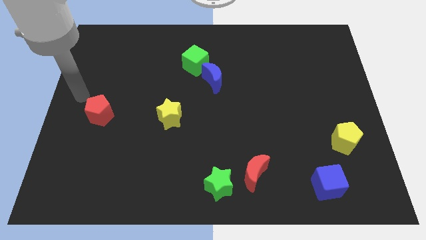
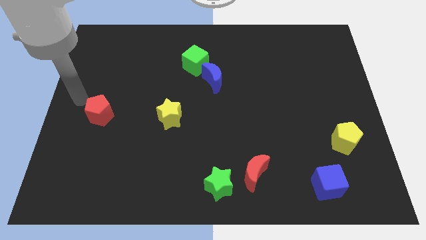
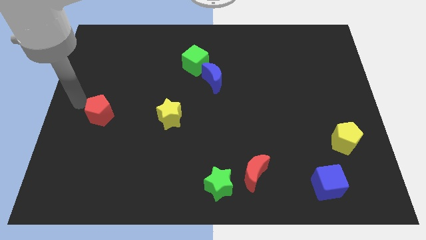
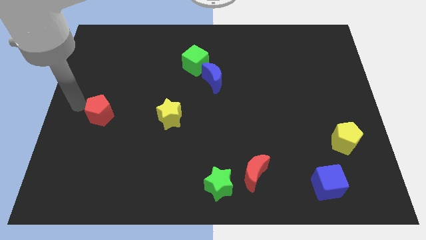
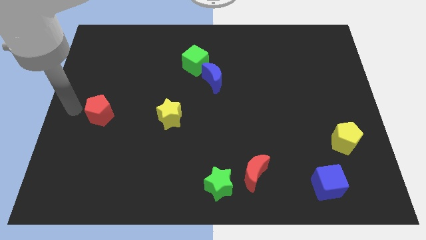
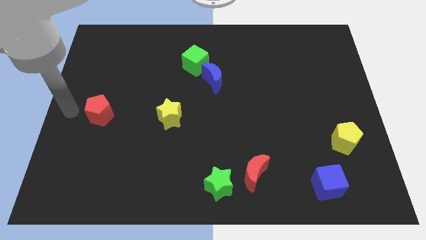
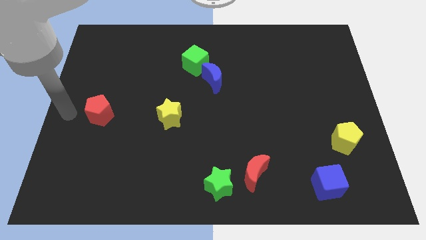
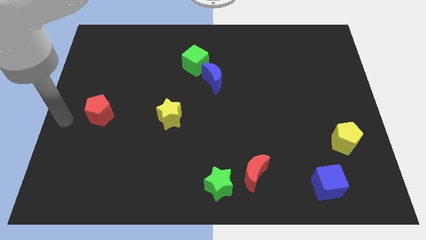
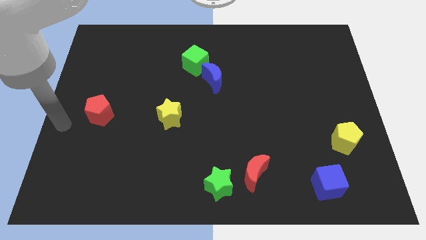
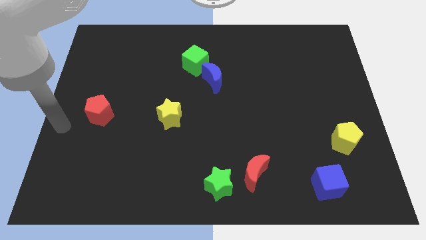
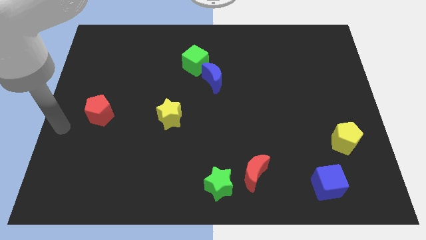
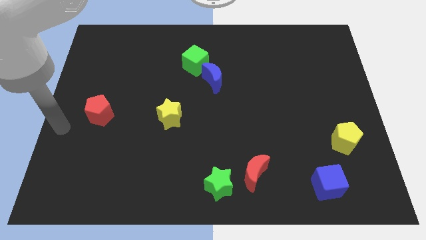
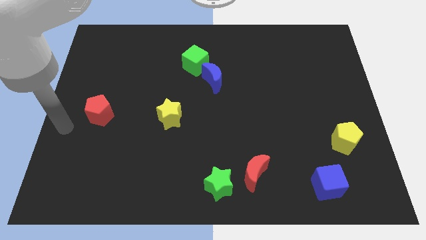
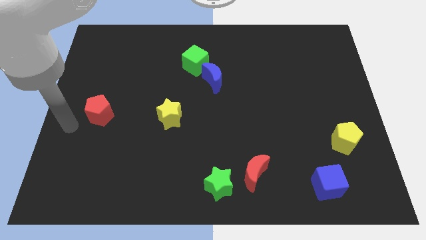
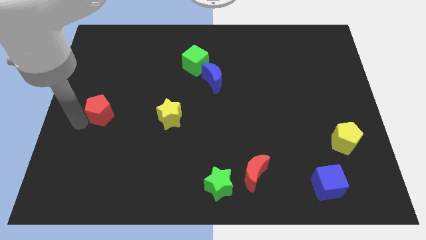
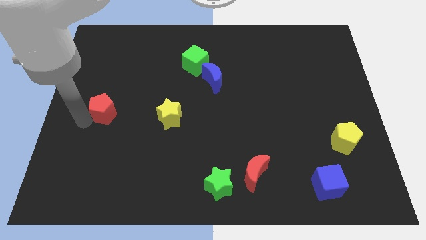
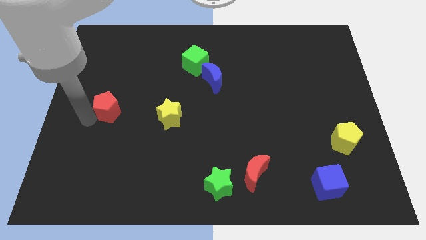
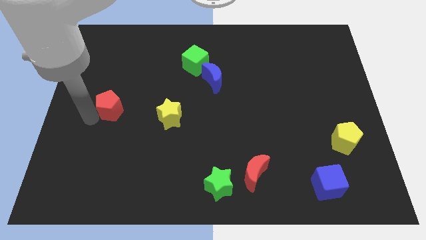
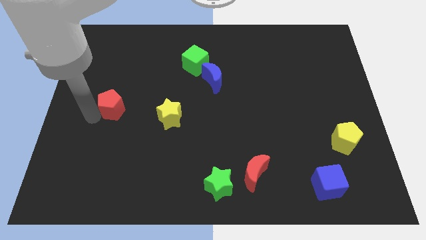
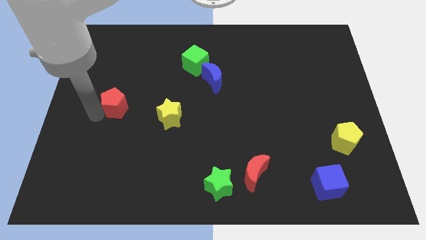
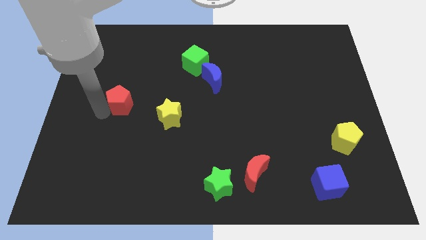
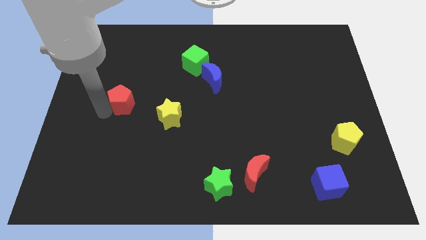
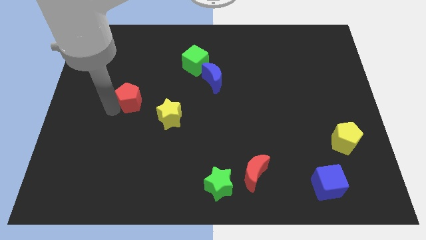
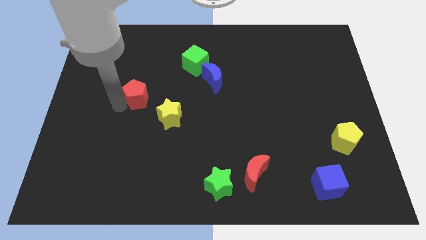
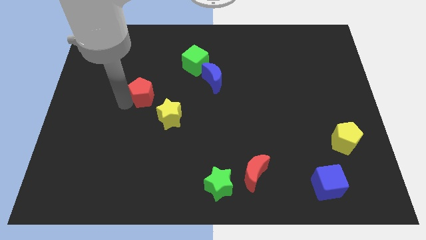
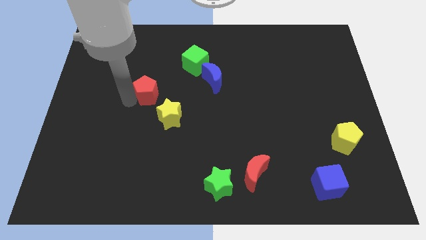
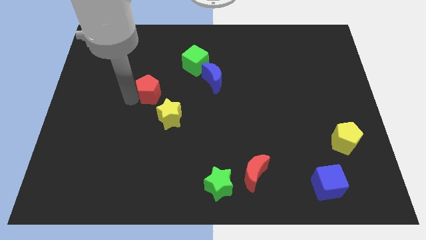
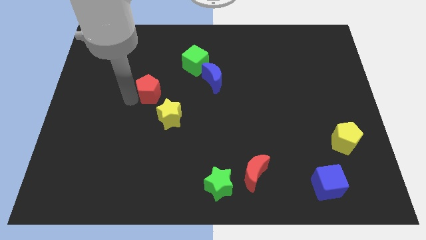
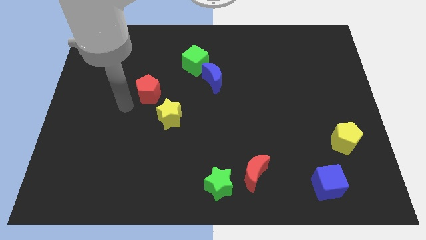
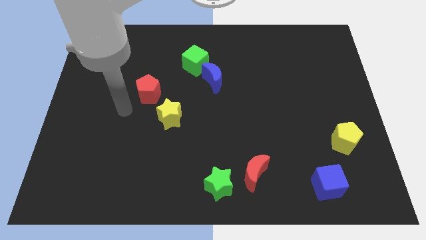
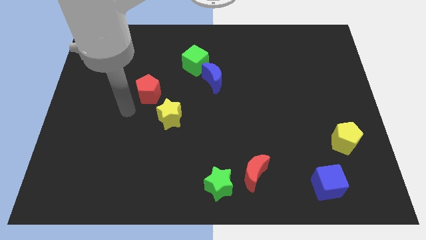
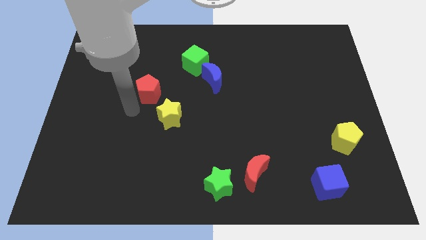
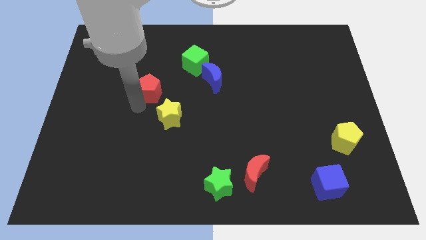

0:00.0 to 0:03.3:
move red pentagon towards green cube

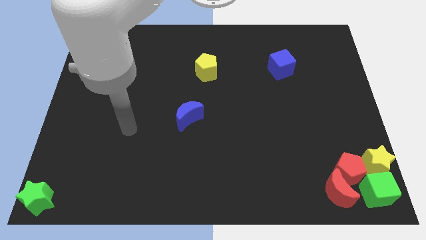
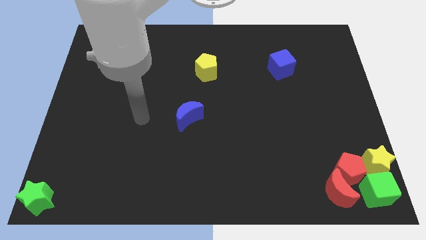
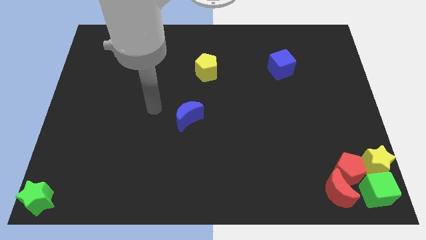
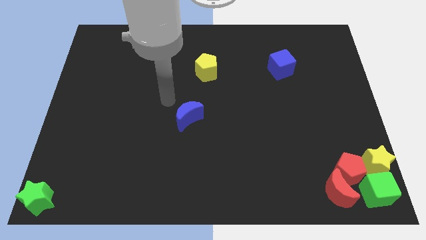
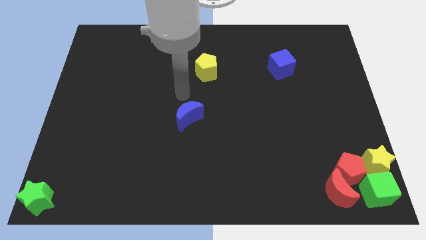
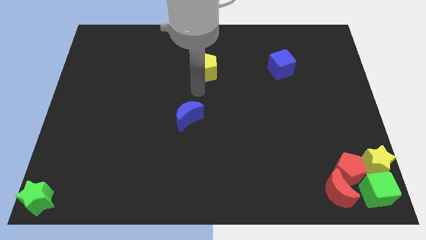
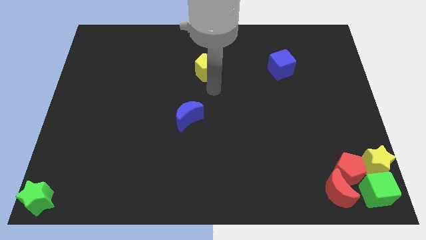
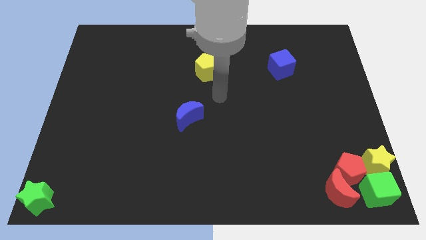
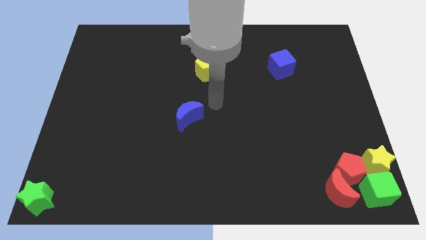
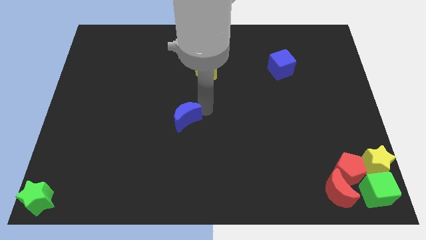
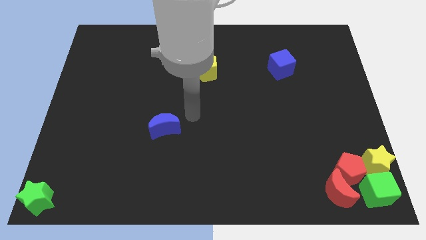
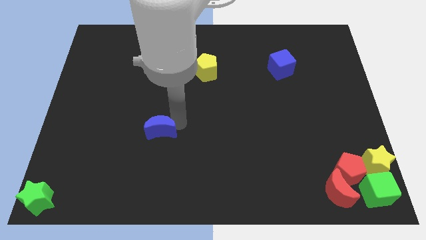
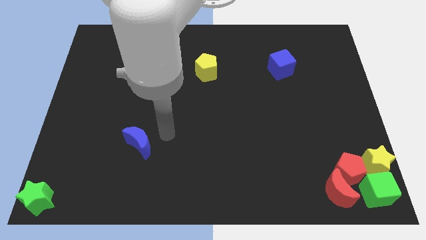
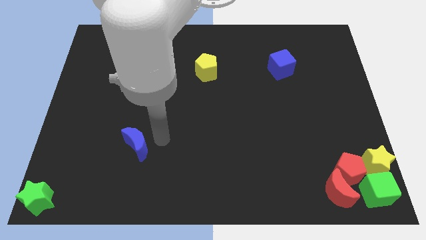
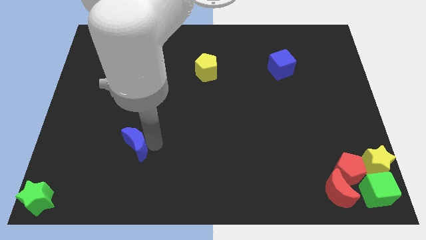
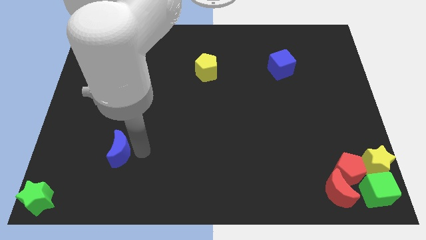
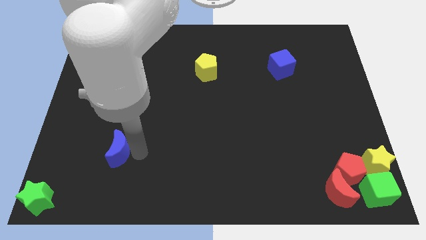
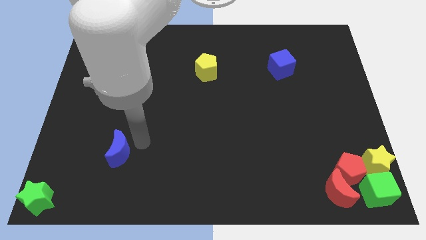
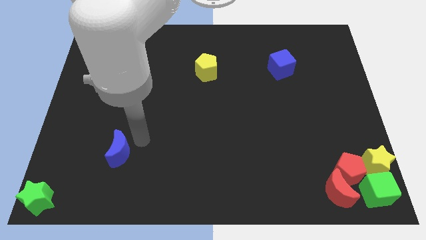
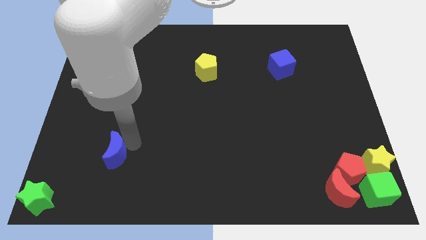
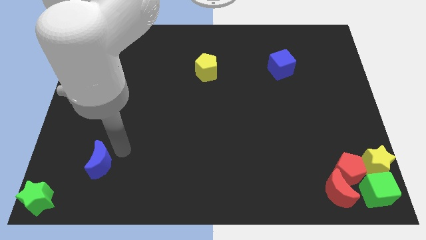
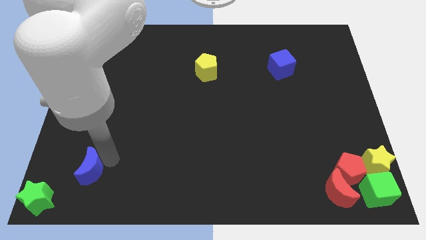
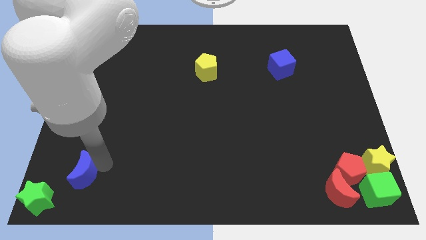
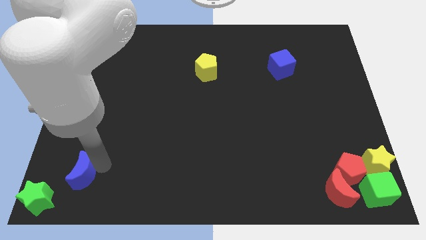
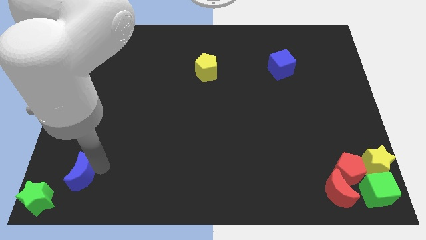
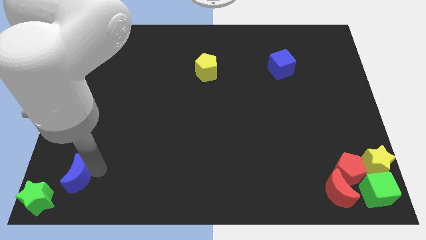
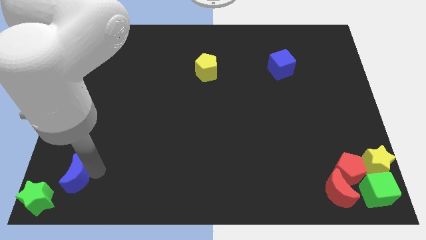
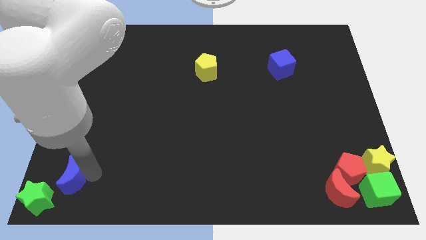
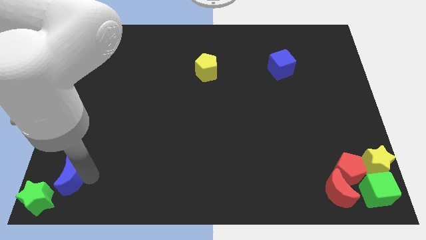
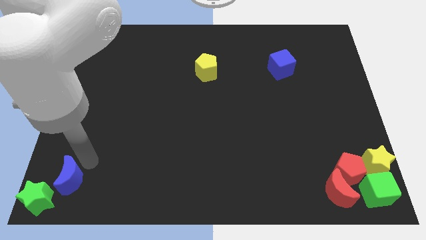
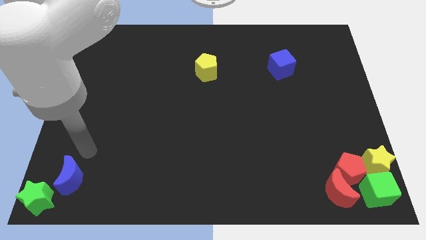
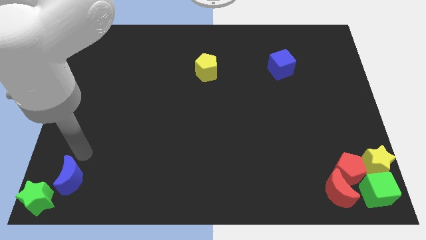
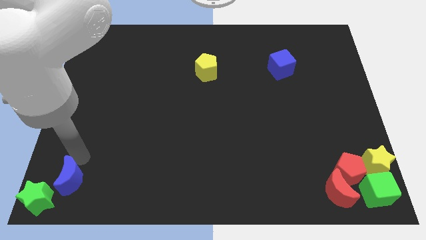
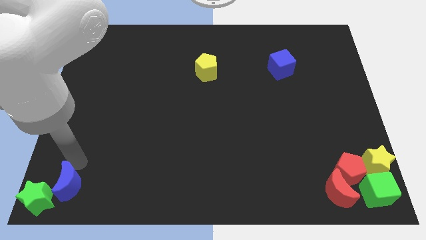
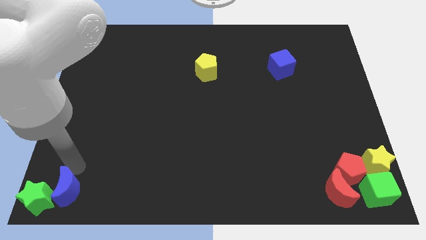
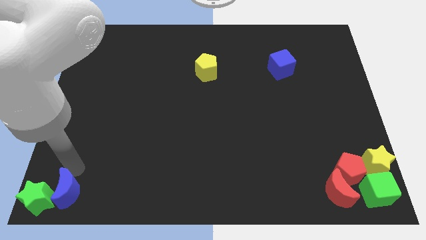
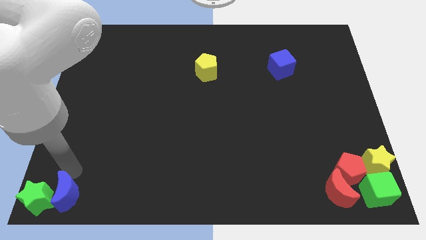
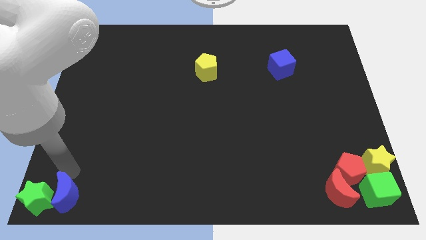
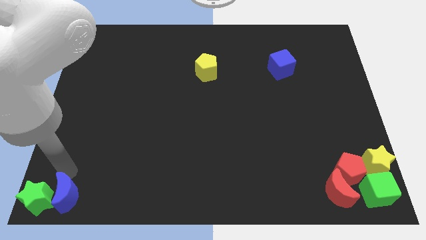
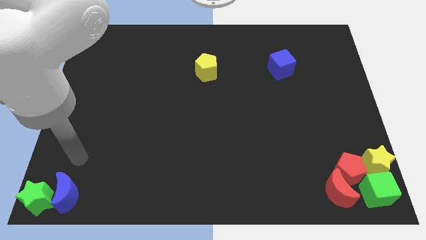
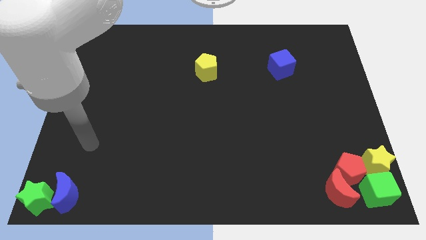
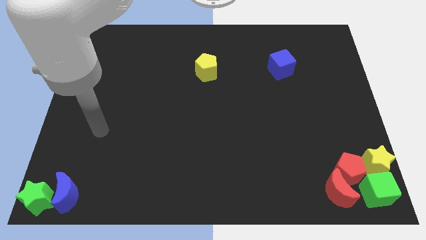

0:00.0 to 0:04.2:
place the blue crescent to the right of green star

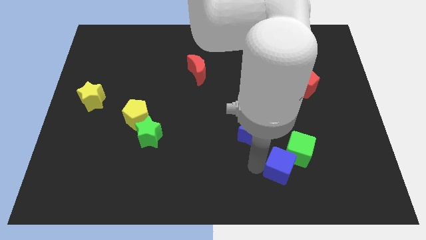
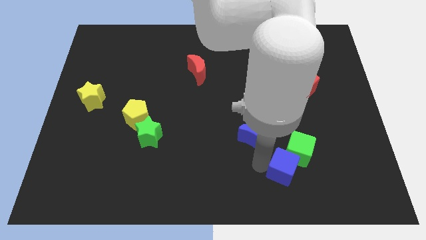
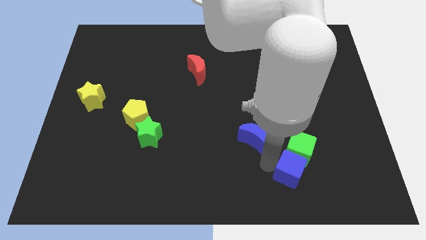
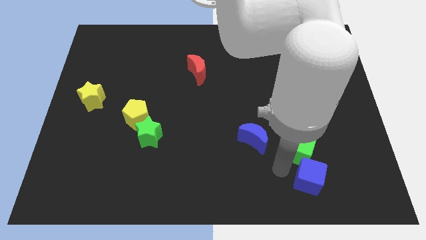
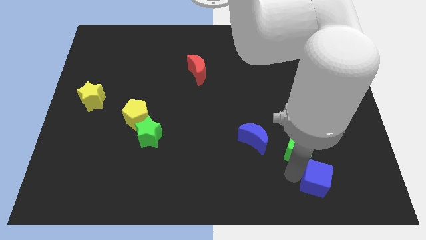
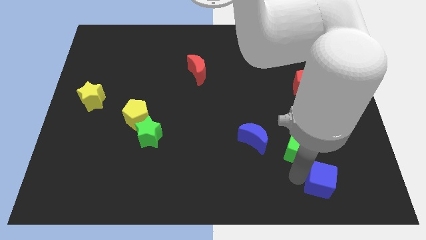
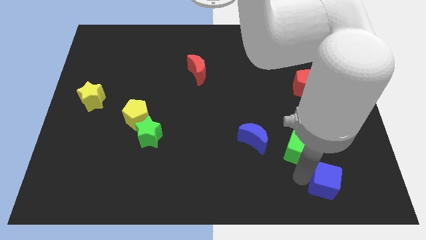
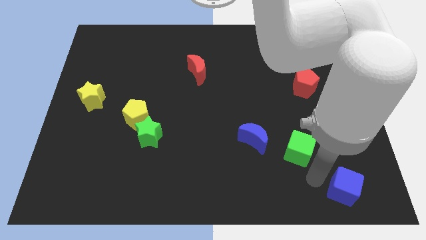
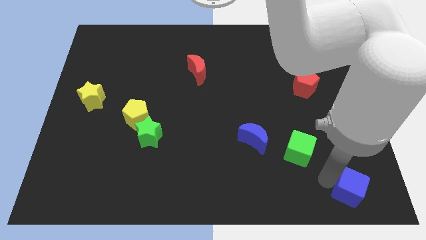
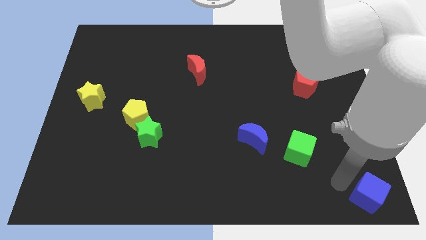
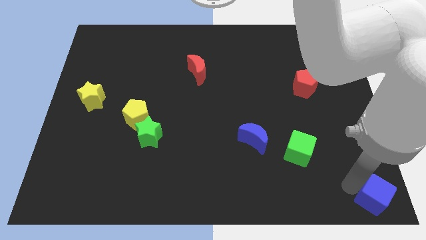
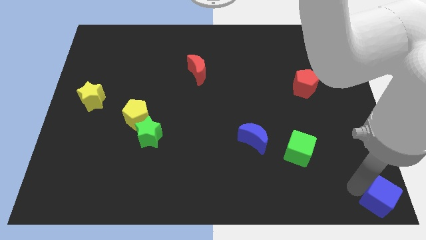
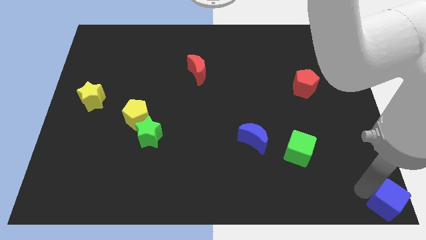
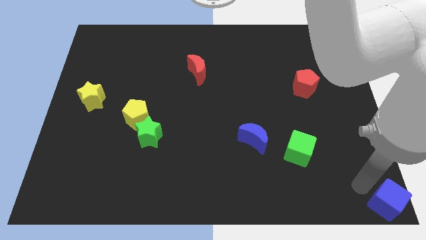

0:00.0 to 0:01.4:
move the blue cube to the bottom right

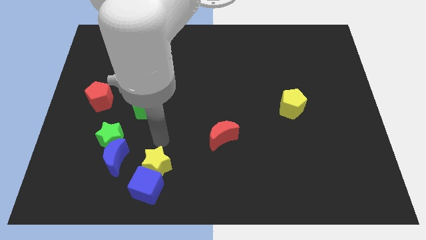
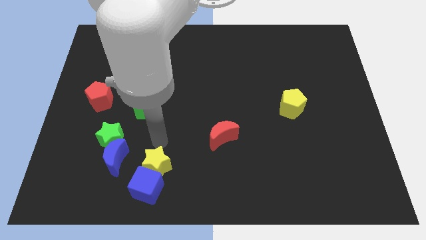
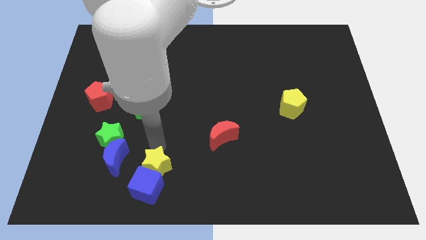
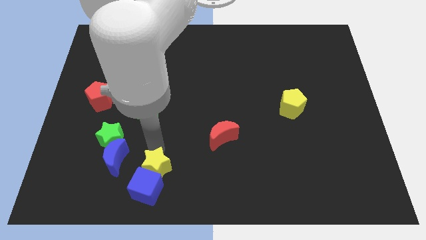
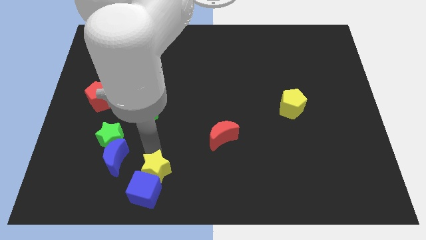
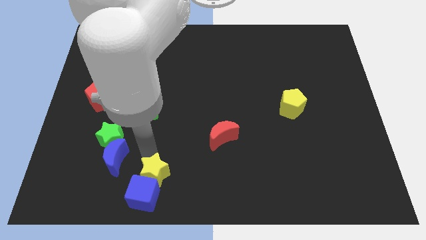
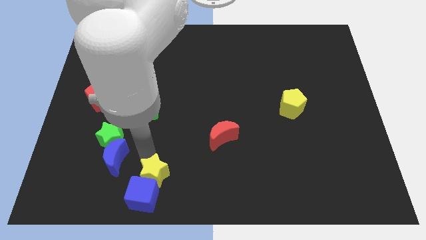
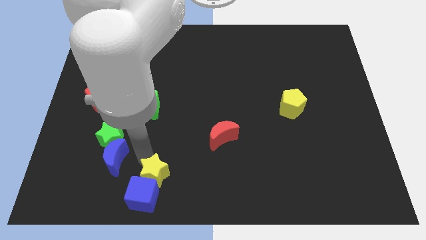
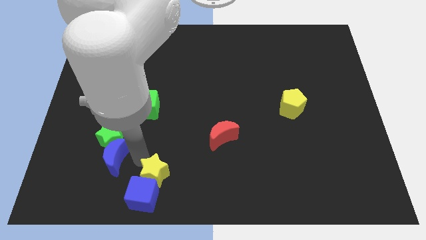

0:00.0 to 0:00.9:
push the yellow star and blue cube towards the bottom side of the board
